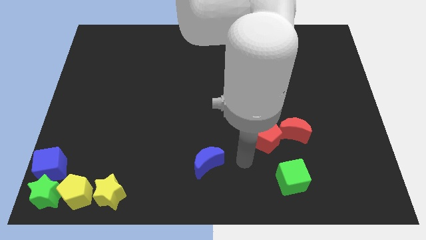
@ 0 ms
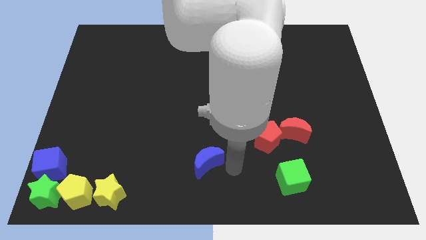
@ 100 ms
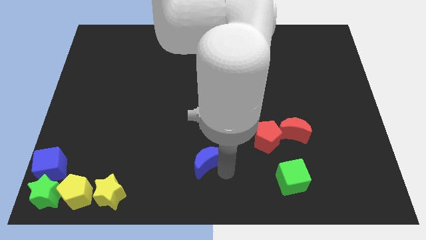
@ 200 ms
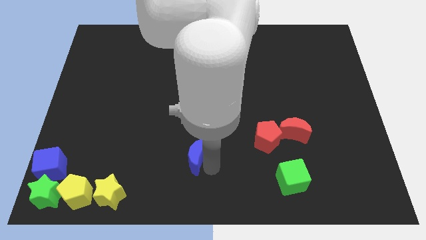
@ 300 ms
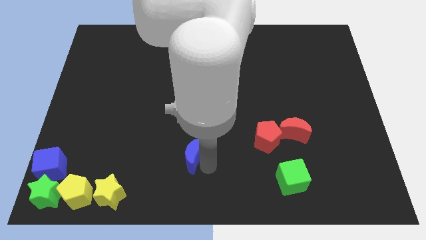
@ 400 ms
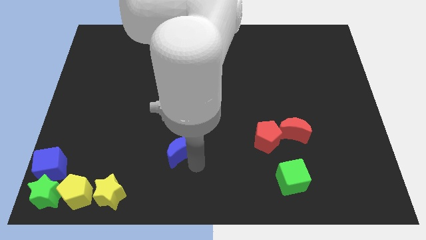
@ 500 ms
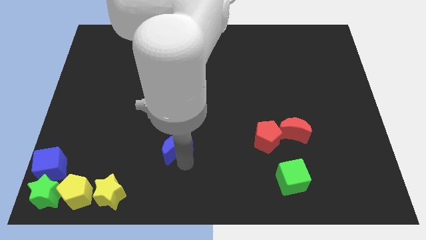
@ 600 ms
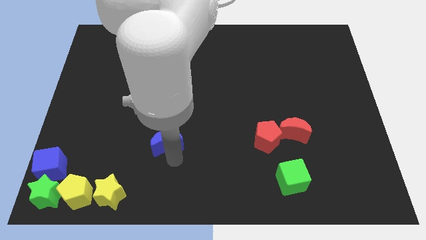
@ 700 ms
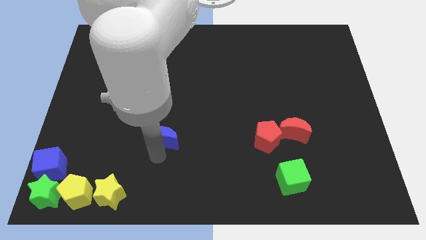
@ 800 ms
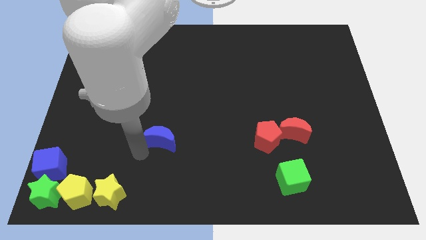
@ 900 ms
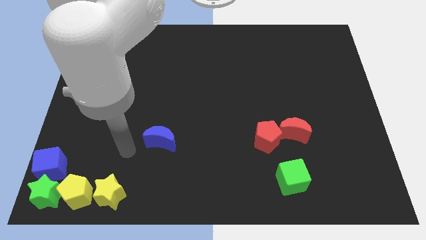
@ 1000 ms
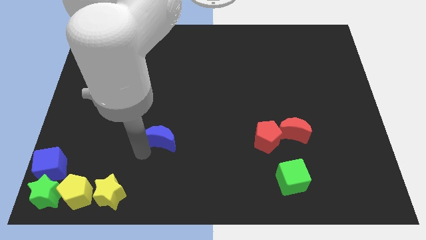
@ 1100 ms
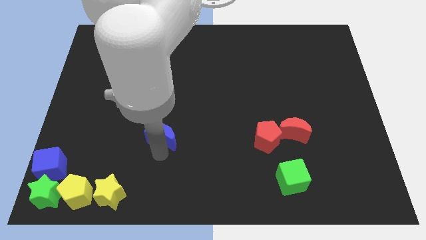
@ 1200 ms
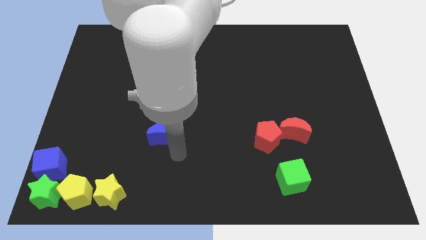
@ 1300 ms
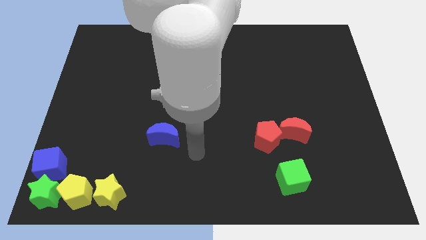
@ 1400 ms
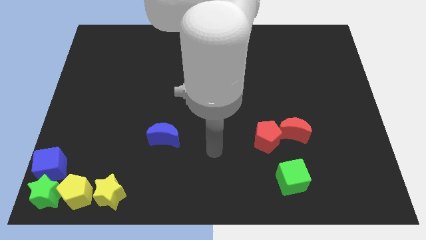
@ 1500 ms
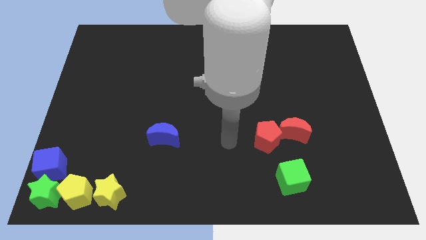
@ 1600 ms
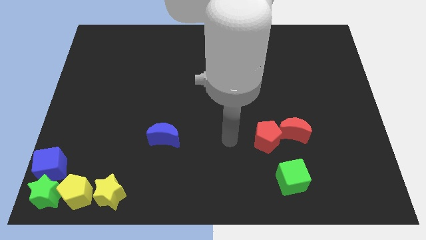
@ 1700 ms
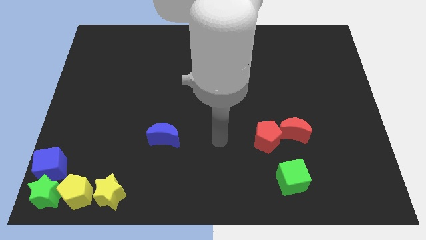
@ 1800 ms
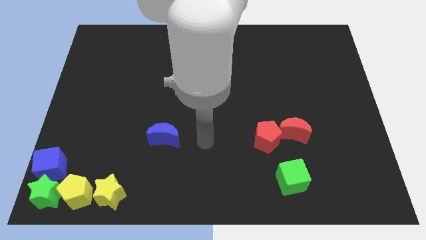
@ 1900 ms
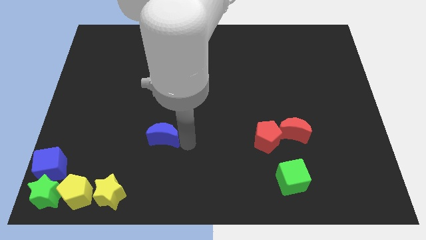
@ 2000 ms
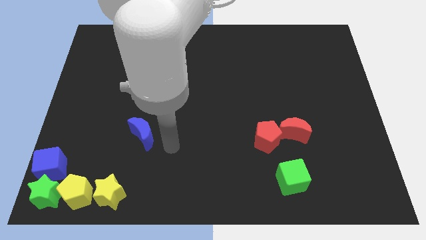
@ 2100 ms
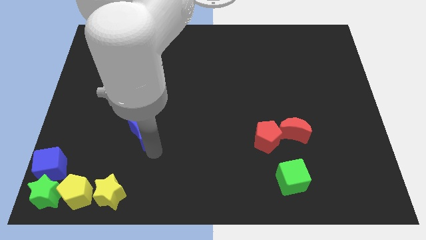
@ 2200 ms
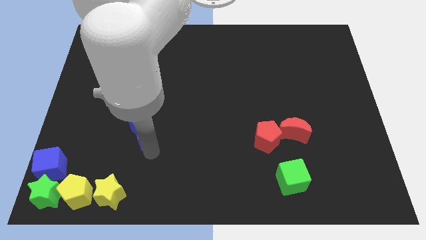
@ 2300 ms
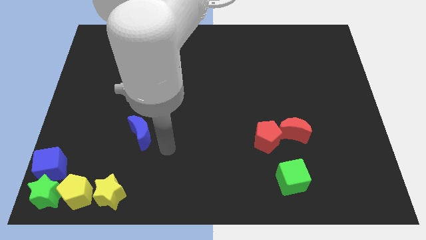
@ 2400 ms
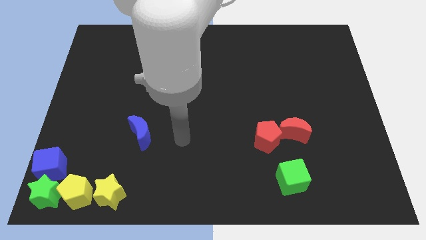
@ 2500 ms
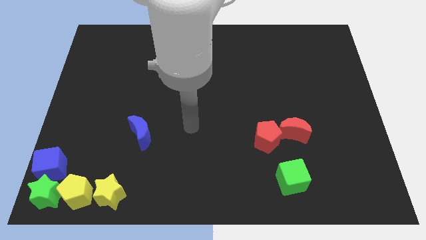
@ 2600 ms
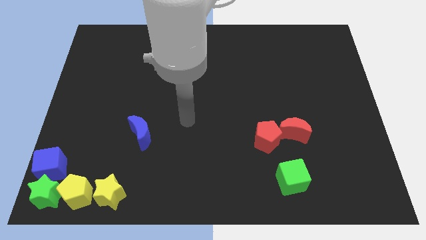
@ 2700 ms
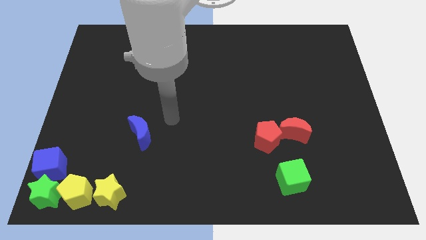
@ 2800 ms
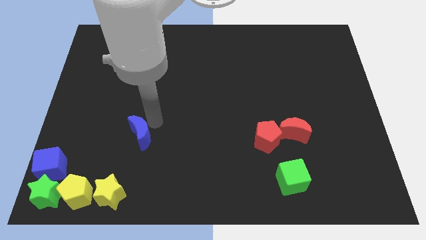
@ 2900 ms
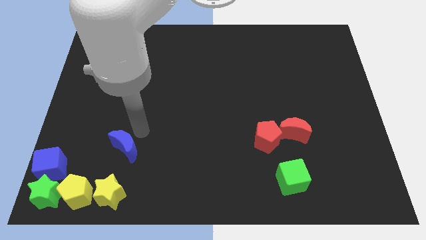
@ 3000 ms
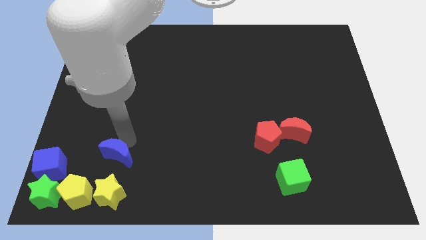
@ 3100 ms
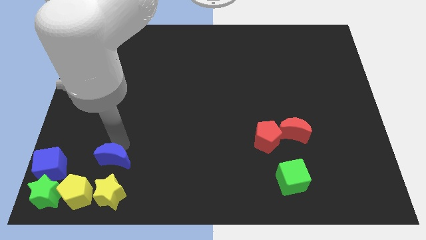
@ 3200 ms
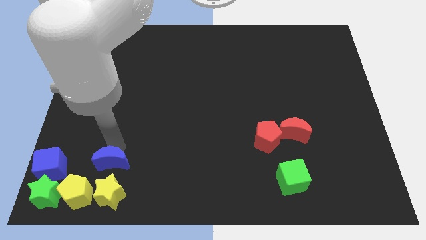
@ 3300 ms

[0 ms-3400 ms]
place blue crescent above yellow star

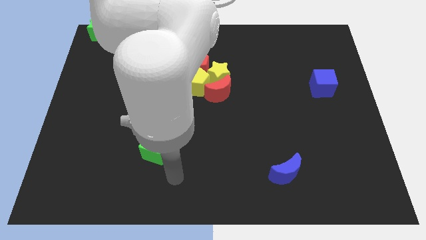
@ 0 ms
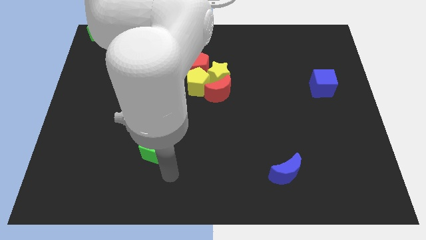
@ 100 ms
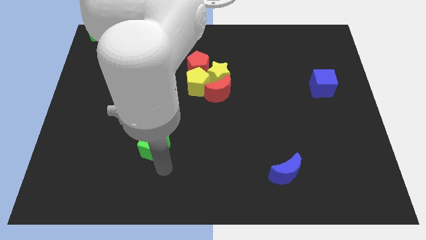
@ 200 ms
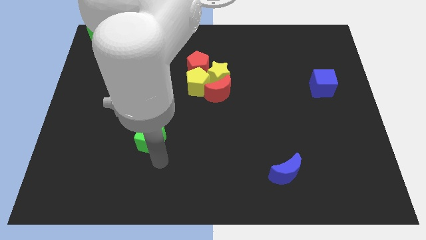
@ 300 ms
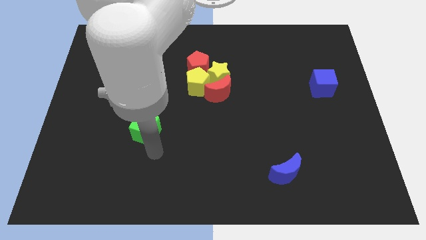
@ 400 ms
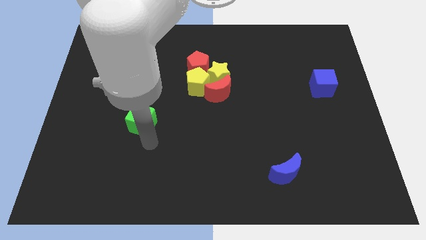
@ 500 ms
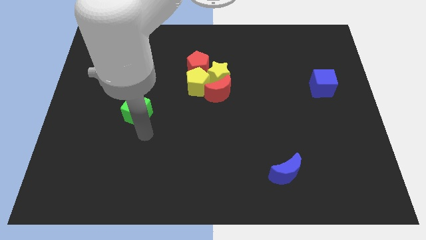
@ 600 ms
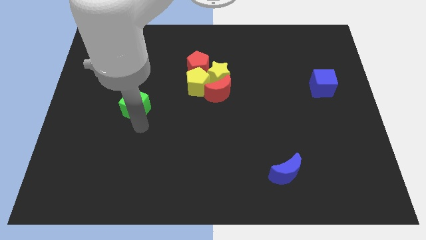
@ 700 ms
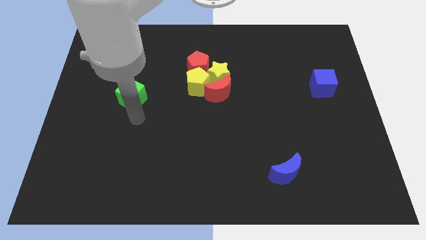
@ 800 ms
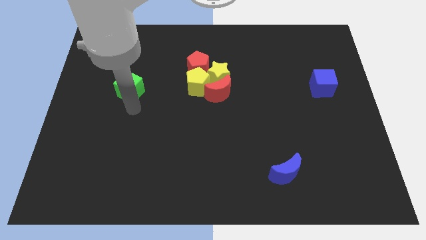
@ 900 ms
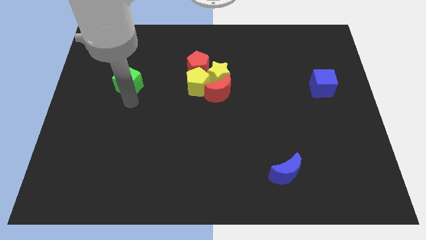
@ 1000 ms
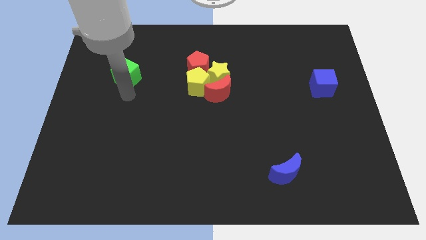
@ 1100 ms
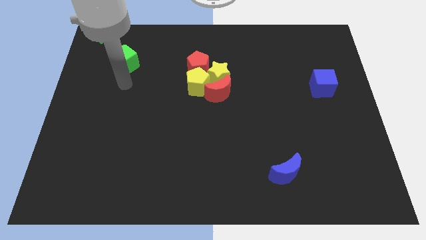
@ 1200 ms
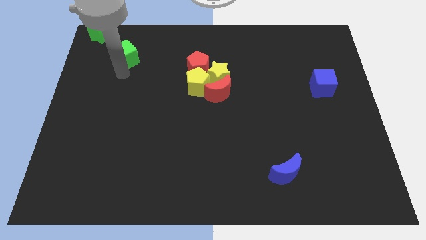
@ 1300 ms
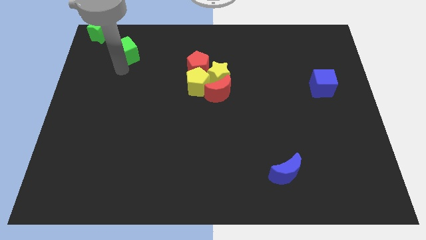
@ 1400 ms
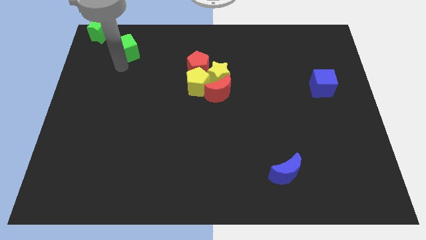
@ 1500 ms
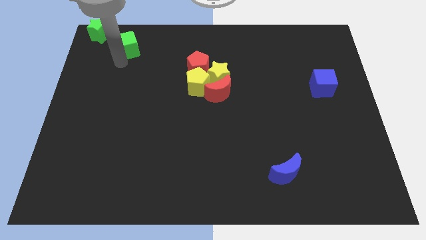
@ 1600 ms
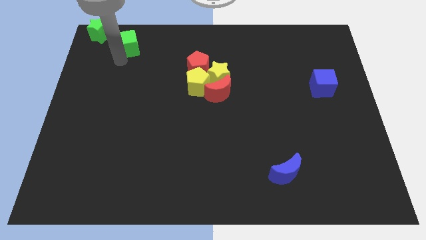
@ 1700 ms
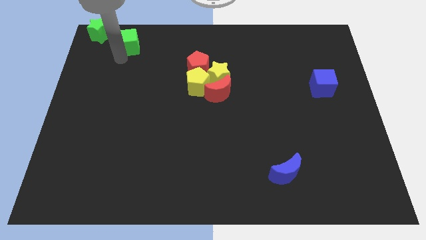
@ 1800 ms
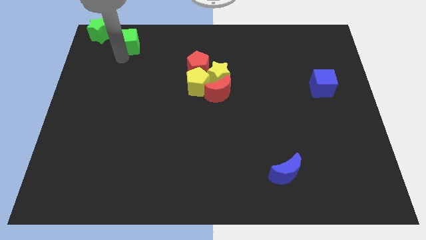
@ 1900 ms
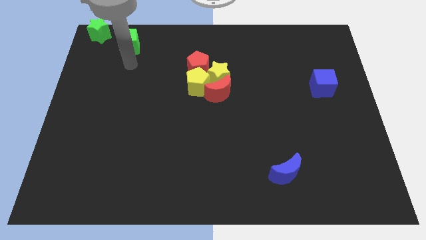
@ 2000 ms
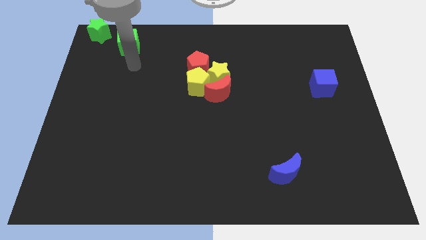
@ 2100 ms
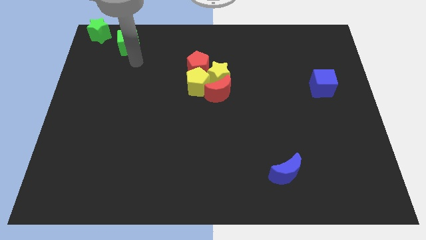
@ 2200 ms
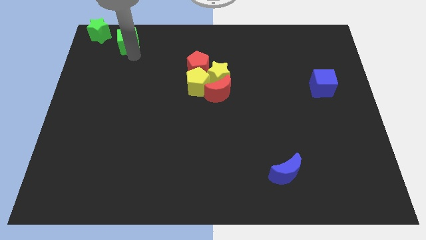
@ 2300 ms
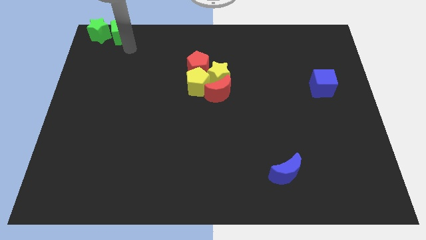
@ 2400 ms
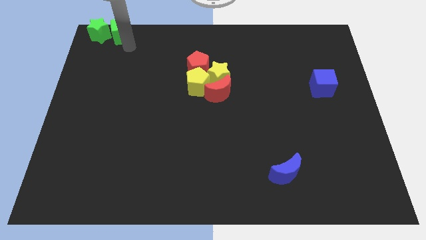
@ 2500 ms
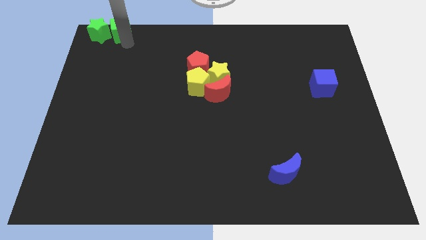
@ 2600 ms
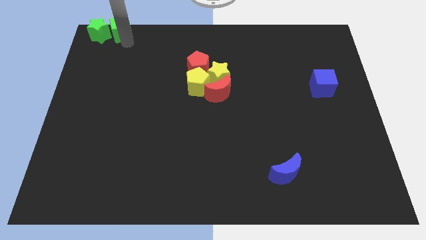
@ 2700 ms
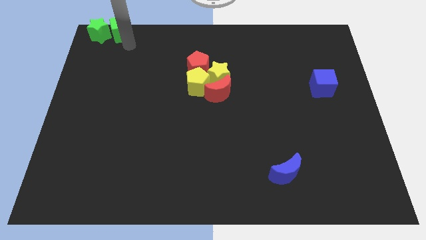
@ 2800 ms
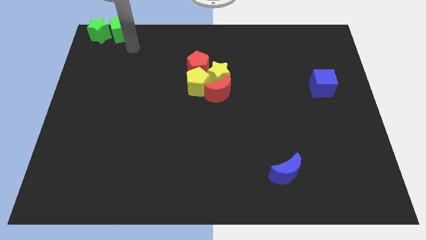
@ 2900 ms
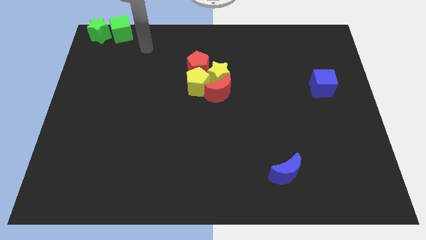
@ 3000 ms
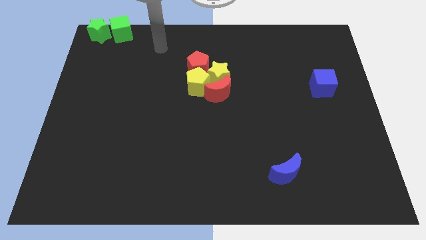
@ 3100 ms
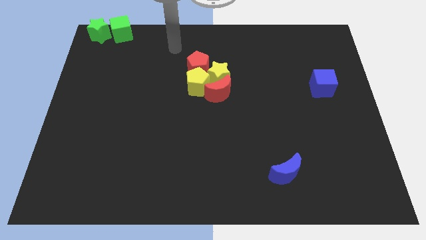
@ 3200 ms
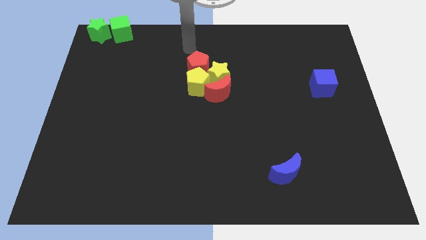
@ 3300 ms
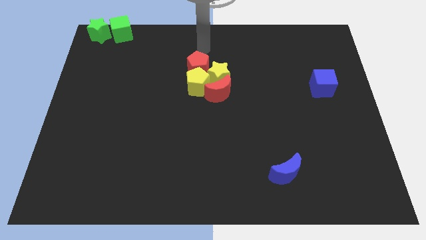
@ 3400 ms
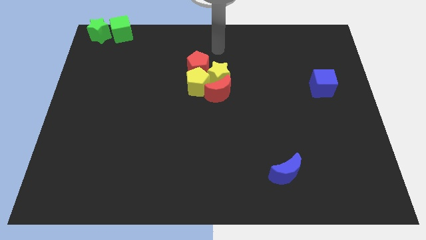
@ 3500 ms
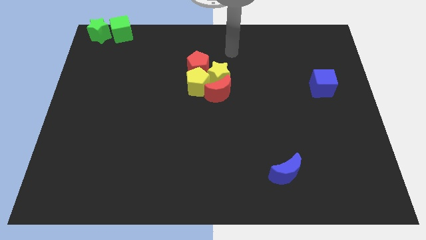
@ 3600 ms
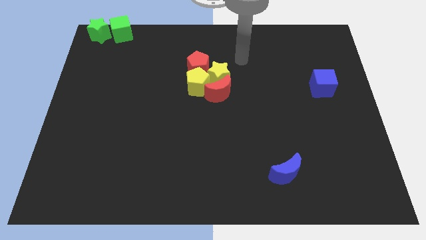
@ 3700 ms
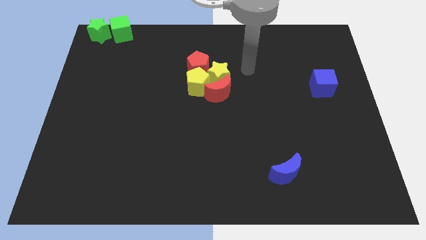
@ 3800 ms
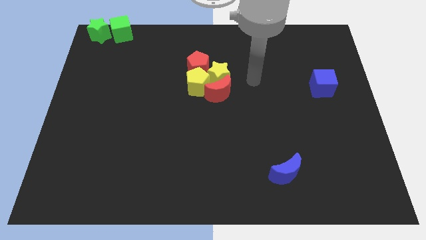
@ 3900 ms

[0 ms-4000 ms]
place the green cube to the right side of the green star

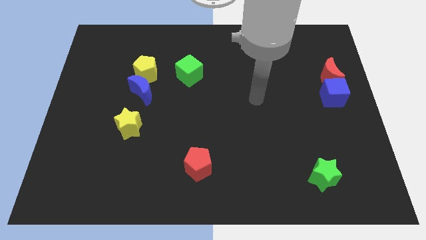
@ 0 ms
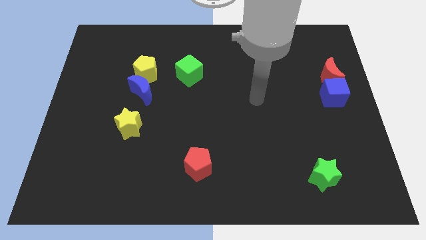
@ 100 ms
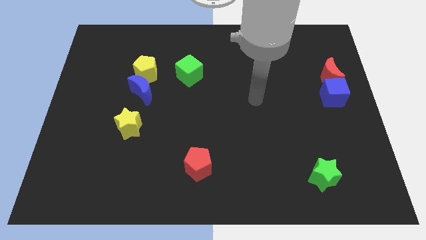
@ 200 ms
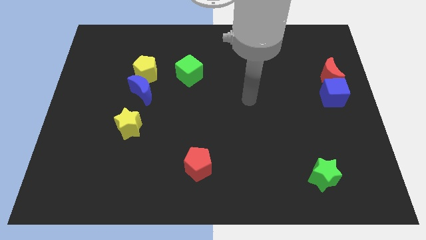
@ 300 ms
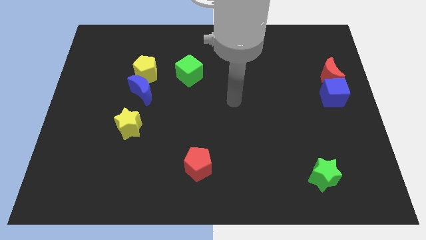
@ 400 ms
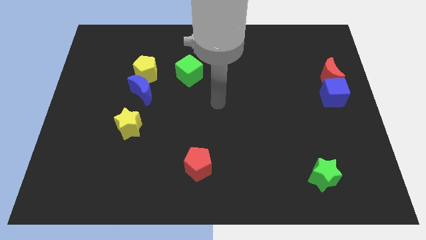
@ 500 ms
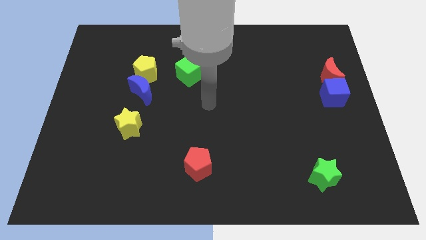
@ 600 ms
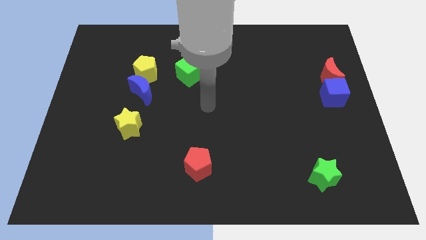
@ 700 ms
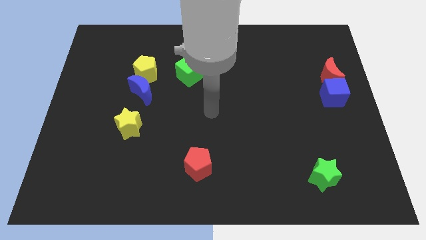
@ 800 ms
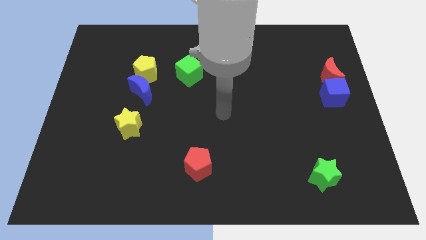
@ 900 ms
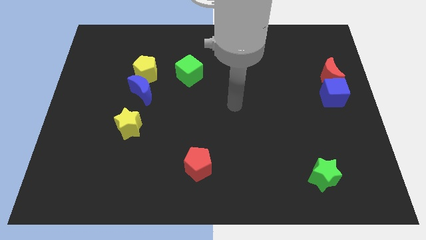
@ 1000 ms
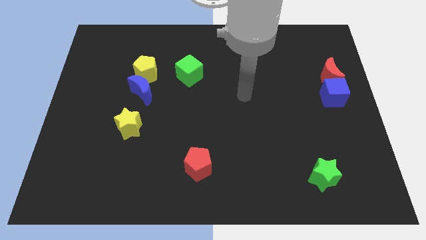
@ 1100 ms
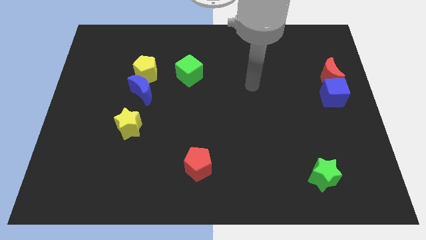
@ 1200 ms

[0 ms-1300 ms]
place the arm diagonally to the red pentagon

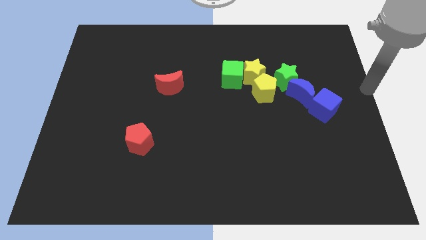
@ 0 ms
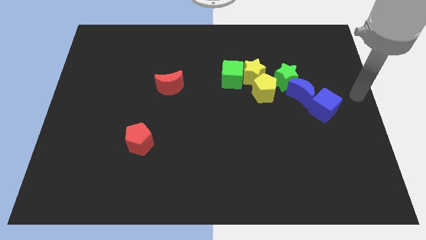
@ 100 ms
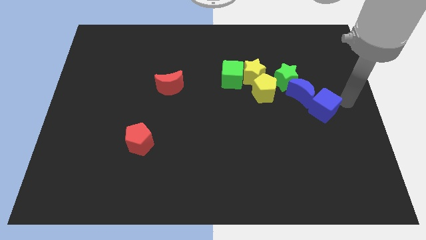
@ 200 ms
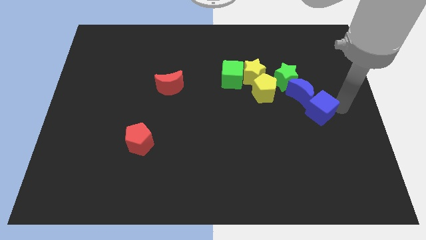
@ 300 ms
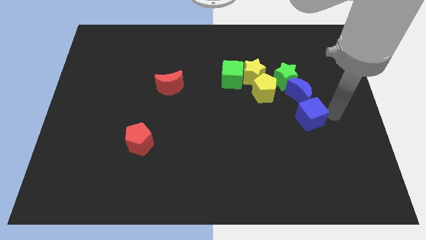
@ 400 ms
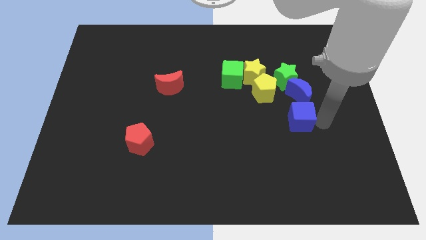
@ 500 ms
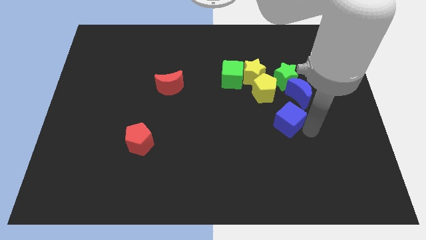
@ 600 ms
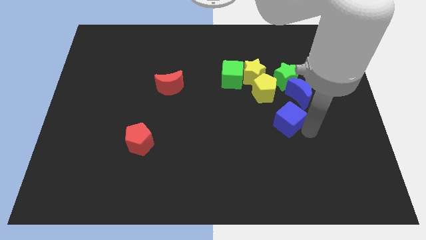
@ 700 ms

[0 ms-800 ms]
place blue cube slightly towards left side
